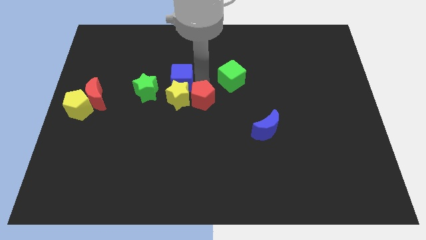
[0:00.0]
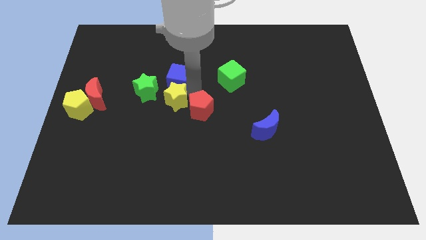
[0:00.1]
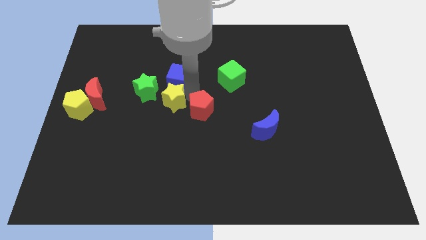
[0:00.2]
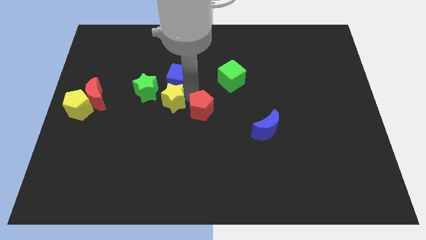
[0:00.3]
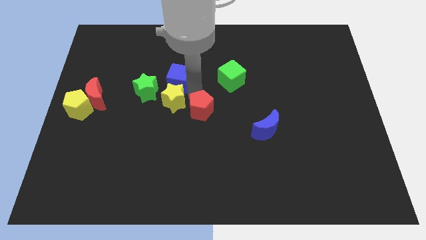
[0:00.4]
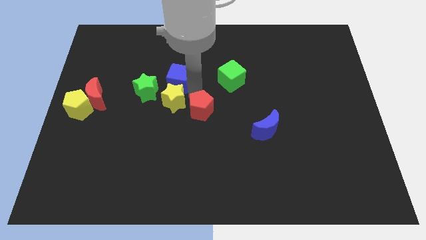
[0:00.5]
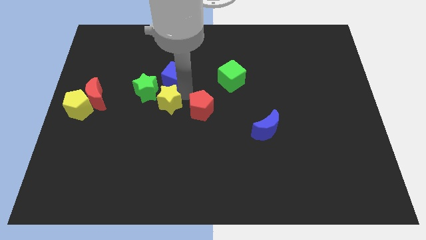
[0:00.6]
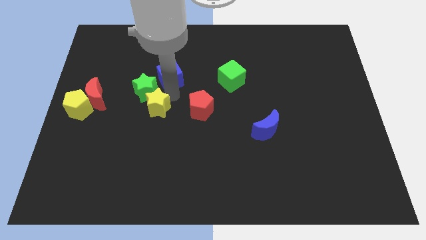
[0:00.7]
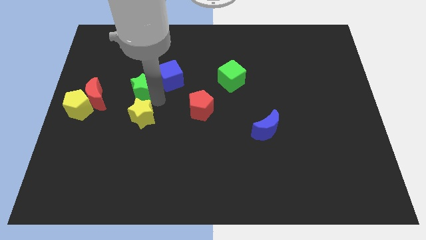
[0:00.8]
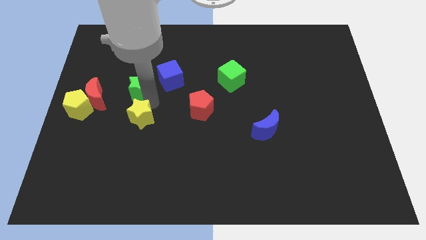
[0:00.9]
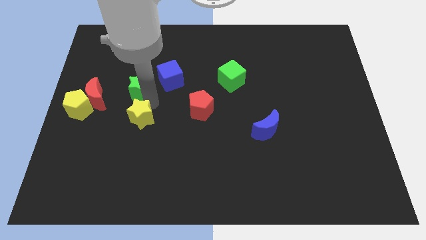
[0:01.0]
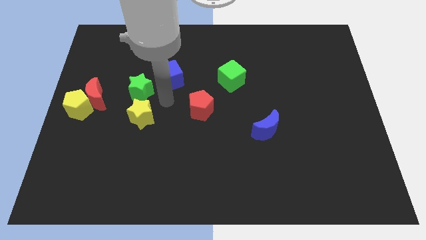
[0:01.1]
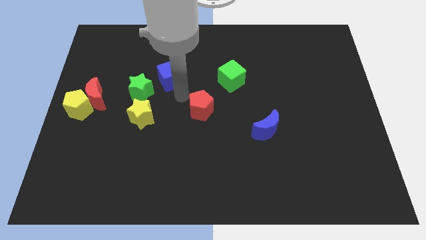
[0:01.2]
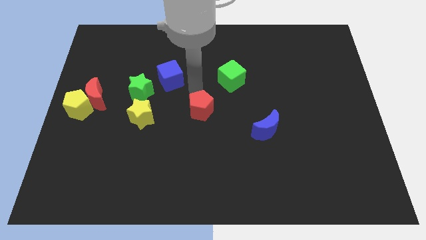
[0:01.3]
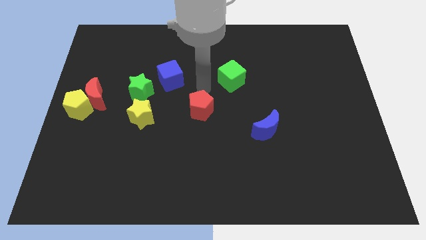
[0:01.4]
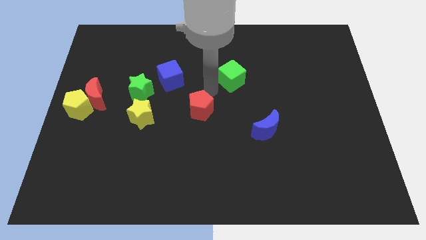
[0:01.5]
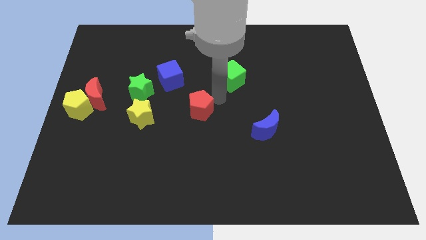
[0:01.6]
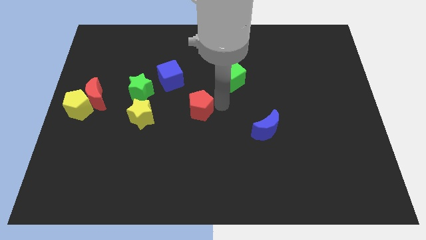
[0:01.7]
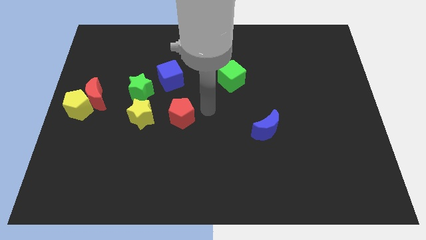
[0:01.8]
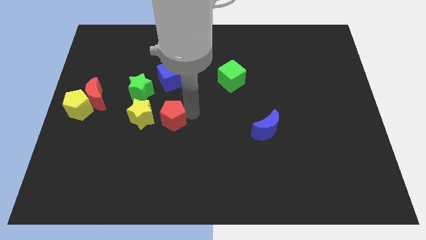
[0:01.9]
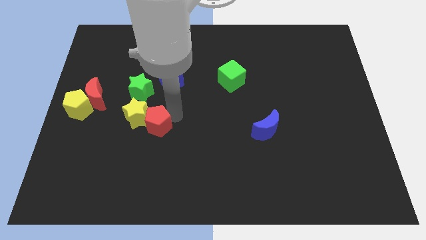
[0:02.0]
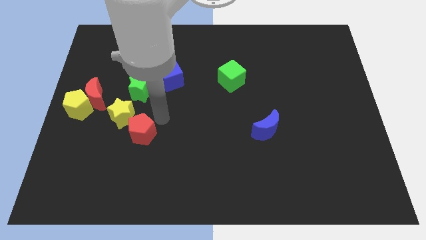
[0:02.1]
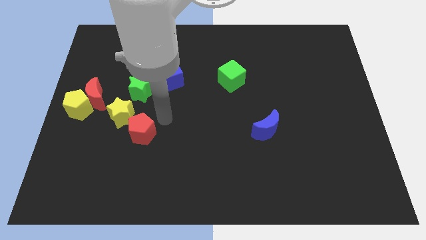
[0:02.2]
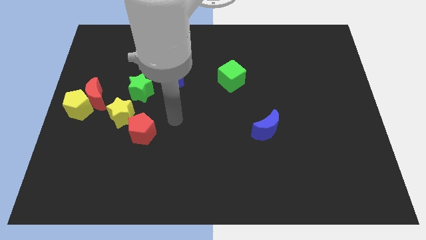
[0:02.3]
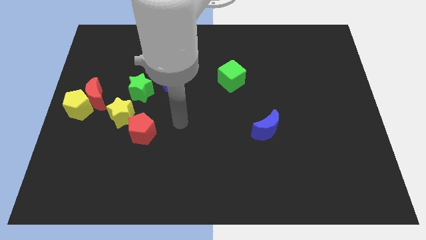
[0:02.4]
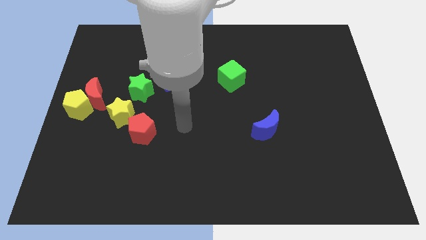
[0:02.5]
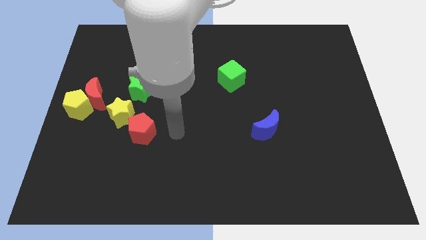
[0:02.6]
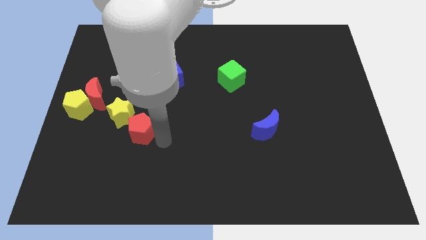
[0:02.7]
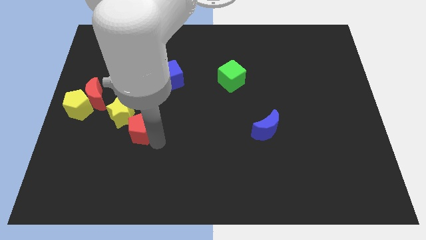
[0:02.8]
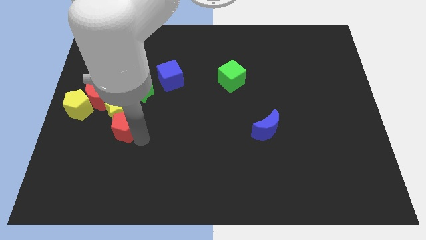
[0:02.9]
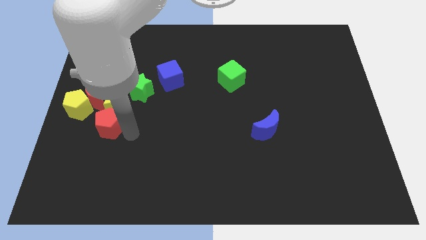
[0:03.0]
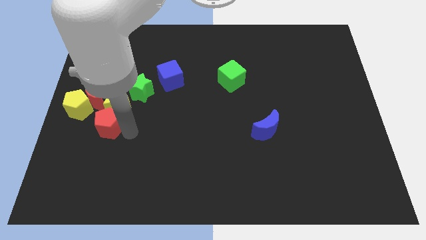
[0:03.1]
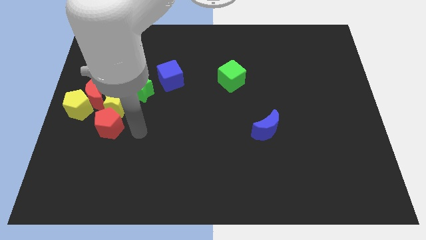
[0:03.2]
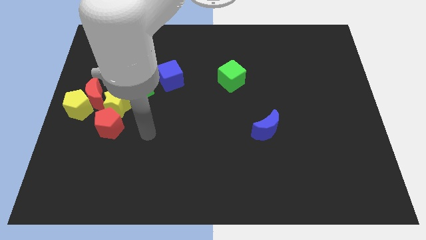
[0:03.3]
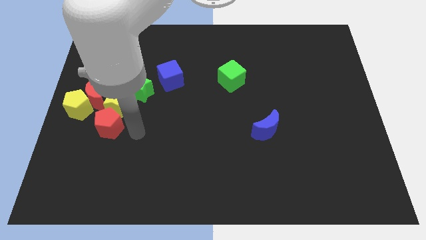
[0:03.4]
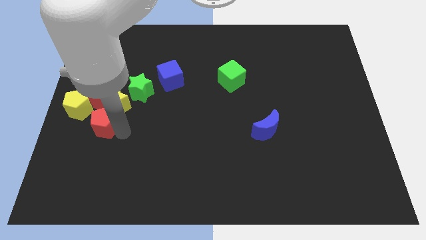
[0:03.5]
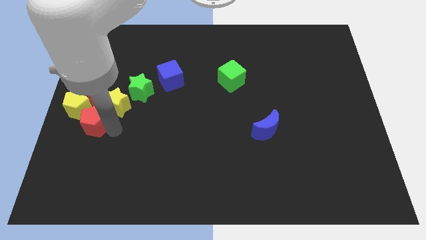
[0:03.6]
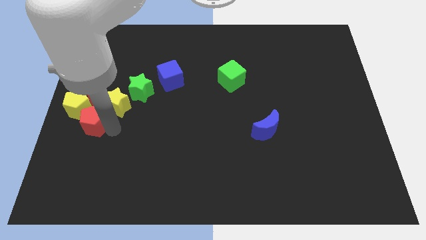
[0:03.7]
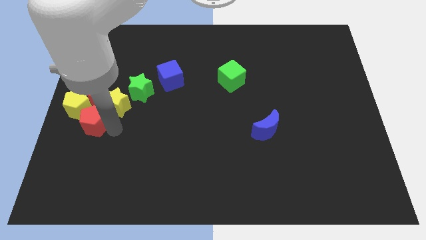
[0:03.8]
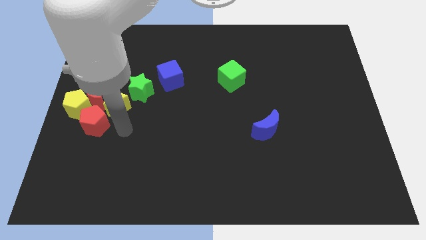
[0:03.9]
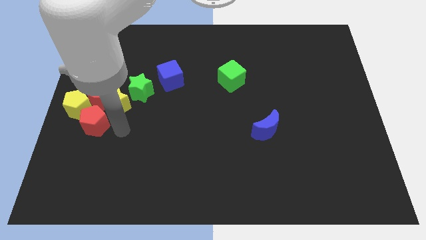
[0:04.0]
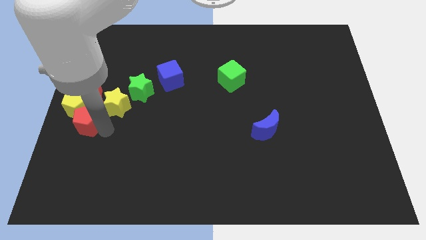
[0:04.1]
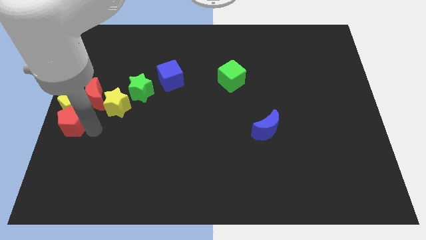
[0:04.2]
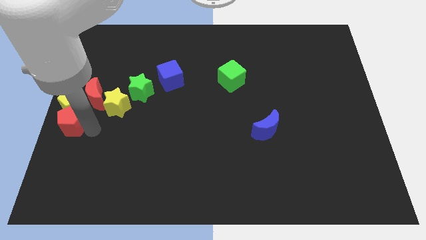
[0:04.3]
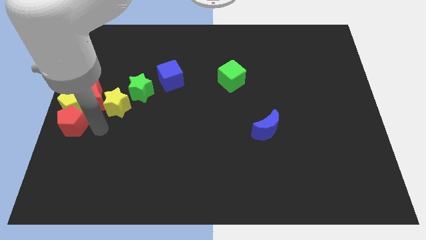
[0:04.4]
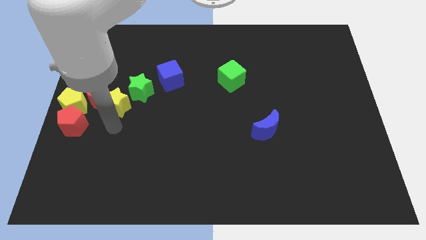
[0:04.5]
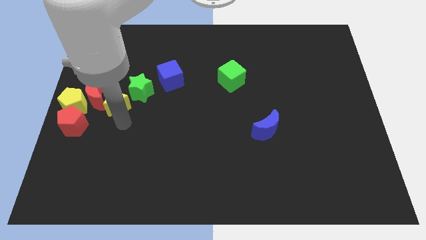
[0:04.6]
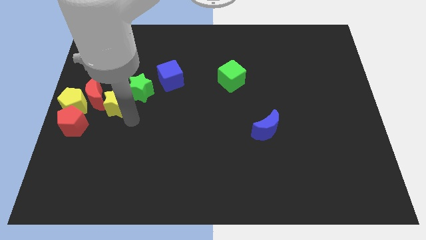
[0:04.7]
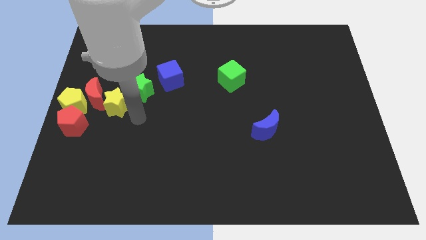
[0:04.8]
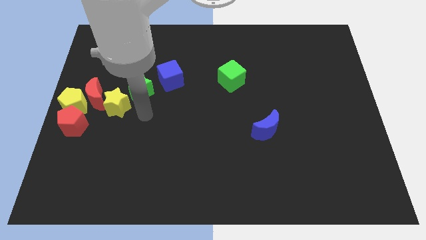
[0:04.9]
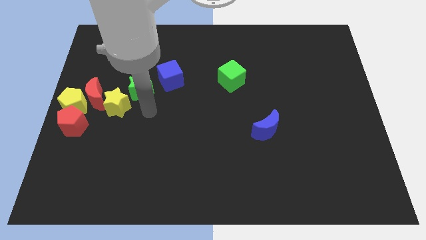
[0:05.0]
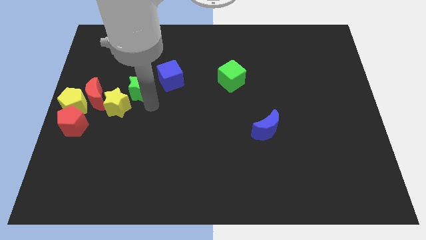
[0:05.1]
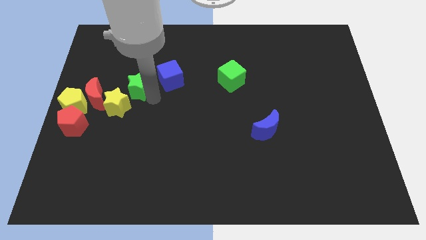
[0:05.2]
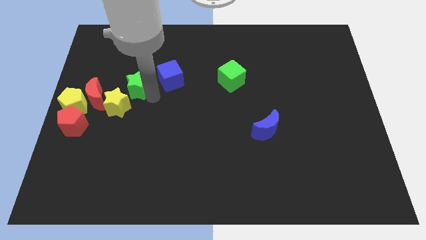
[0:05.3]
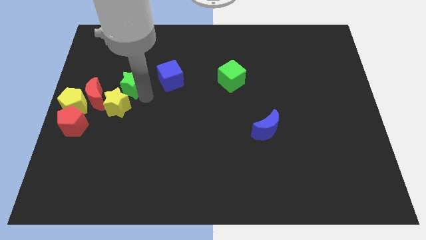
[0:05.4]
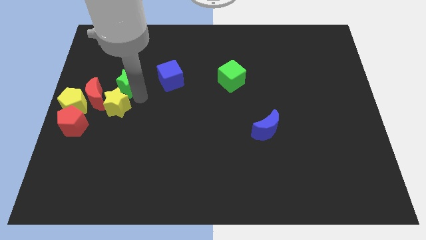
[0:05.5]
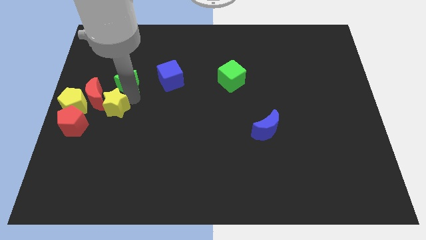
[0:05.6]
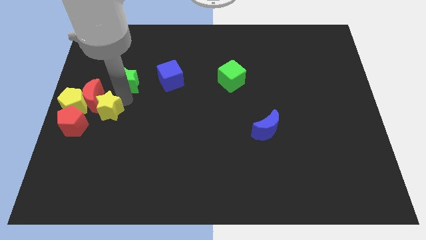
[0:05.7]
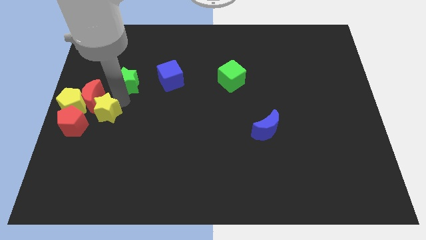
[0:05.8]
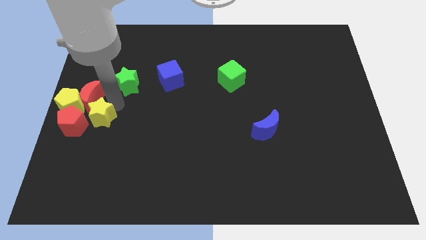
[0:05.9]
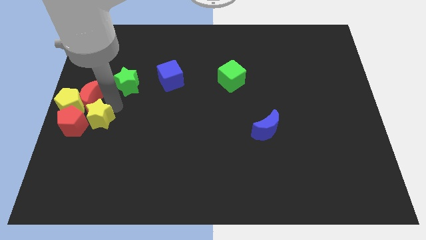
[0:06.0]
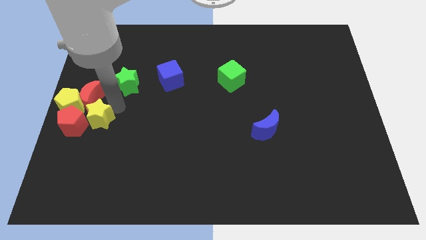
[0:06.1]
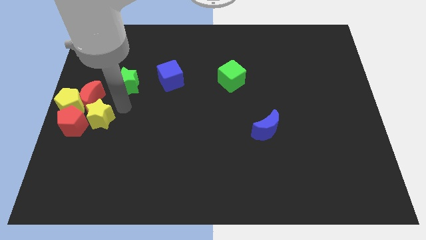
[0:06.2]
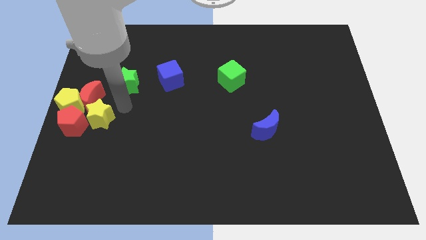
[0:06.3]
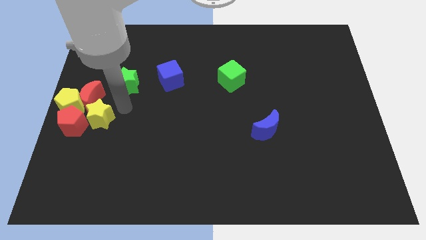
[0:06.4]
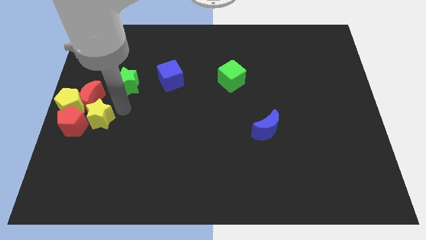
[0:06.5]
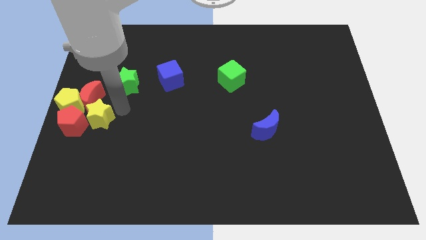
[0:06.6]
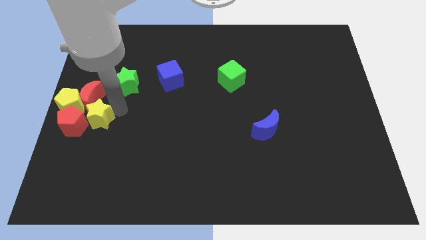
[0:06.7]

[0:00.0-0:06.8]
group up the yellow and red blocks together at the center left of the board

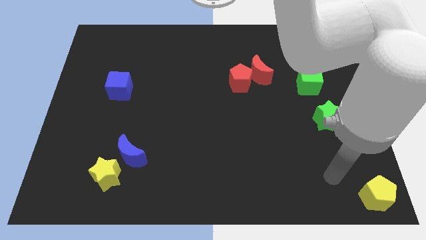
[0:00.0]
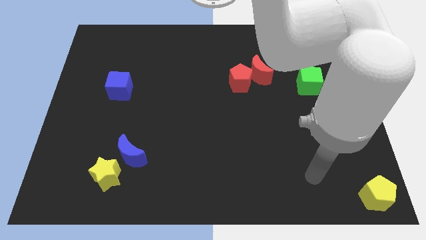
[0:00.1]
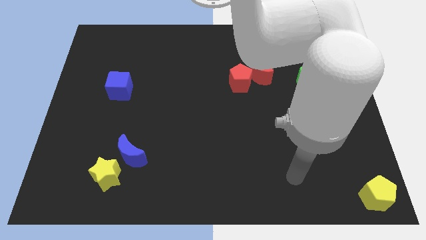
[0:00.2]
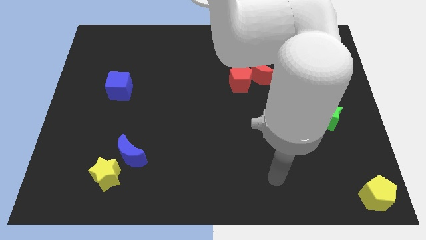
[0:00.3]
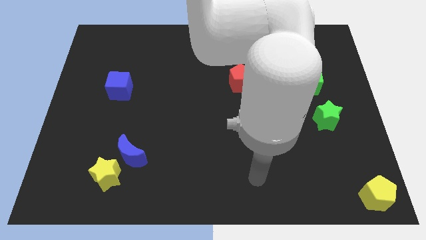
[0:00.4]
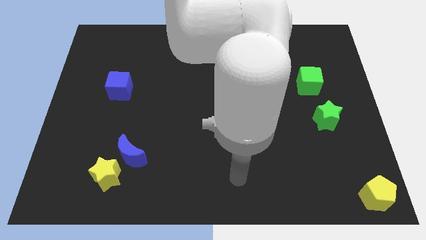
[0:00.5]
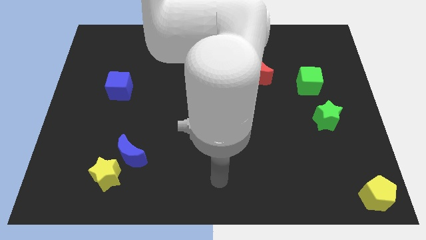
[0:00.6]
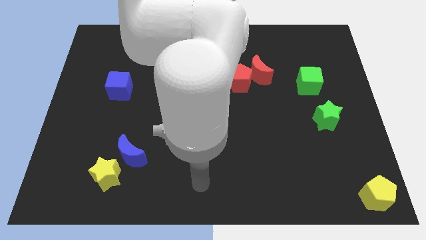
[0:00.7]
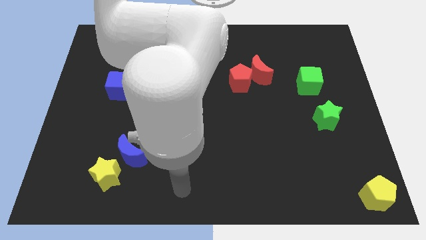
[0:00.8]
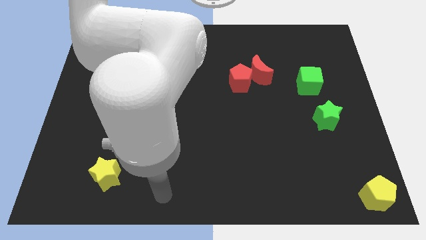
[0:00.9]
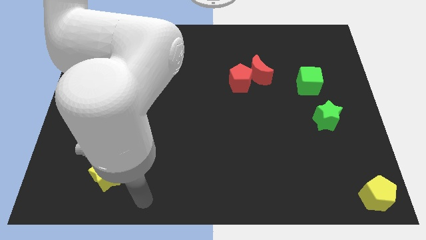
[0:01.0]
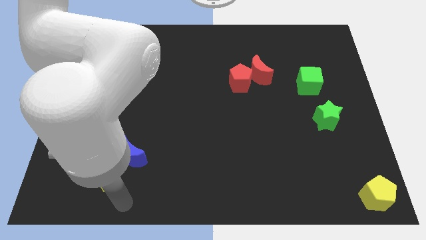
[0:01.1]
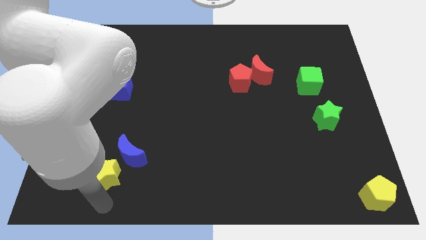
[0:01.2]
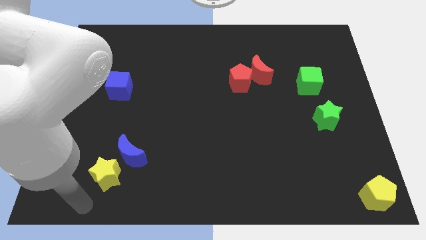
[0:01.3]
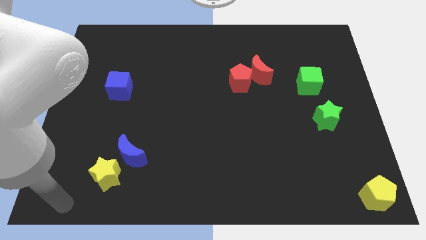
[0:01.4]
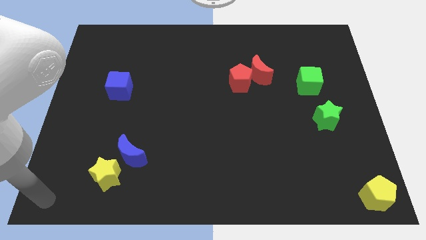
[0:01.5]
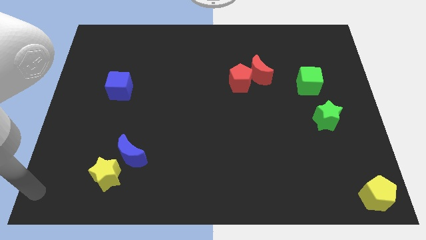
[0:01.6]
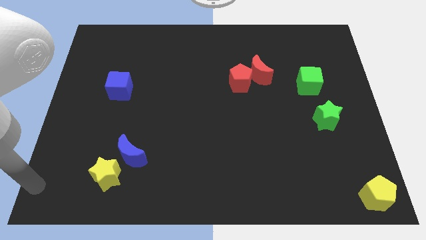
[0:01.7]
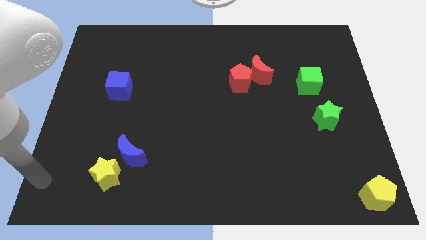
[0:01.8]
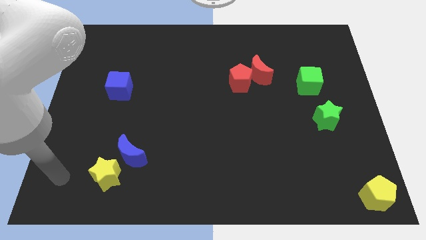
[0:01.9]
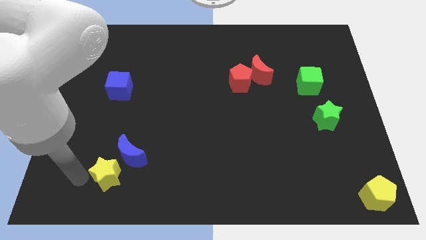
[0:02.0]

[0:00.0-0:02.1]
place the arm to the left of yellow star
